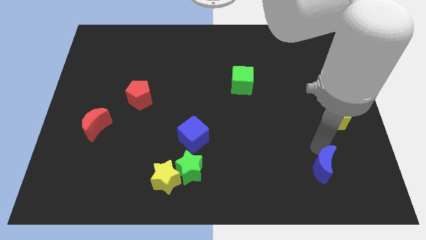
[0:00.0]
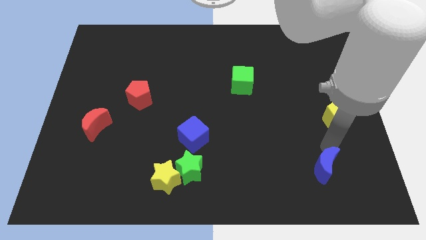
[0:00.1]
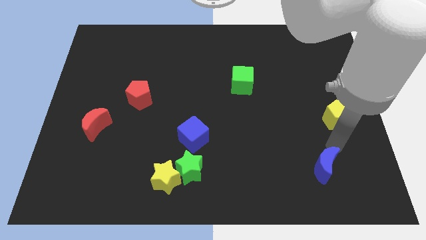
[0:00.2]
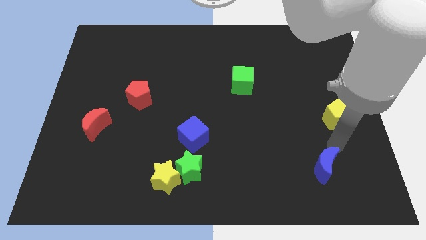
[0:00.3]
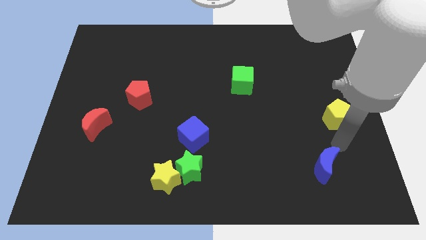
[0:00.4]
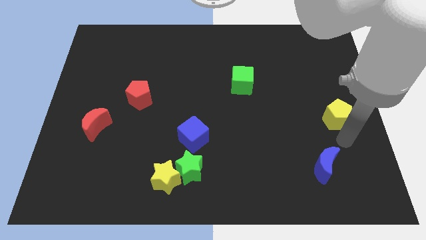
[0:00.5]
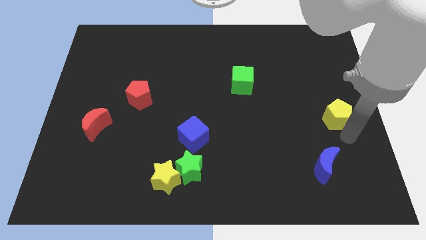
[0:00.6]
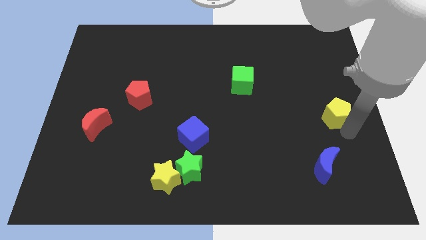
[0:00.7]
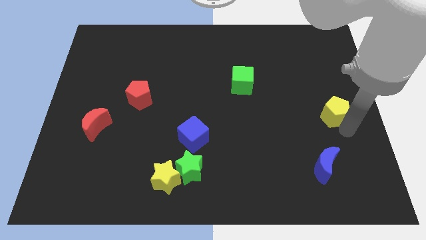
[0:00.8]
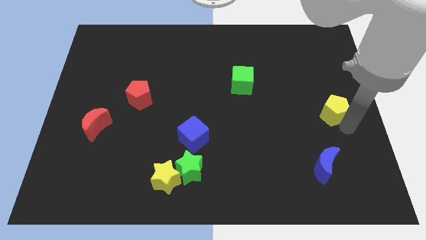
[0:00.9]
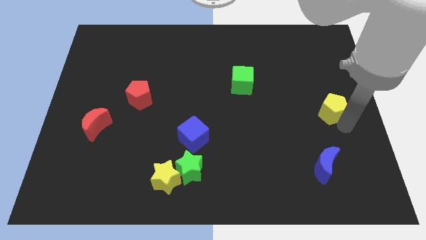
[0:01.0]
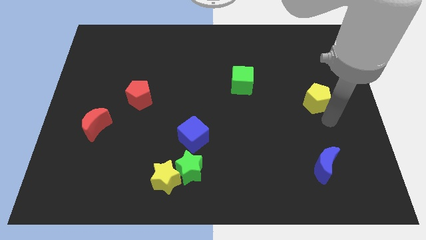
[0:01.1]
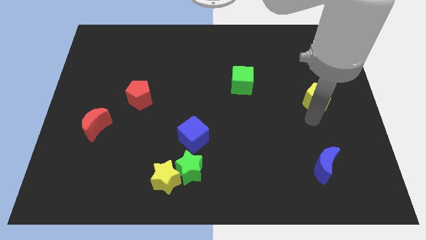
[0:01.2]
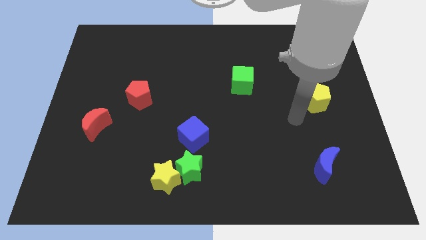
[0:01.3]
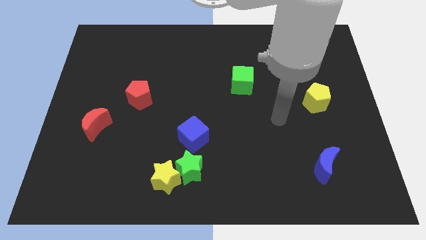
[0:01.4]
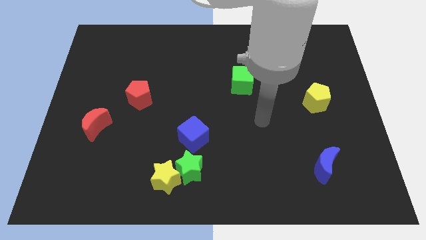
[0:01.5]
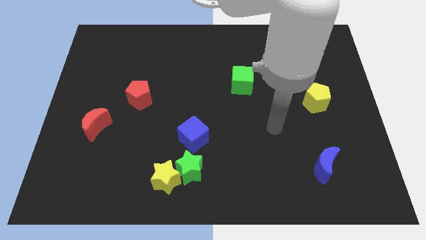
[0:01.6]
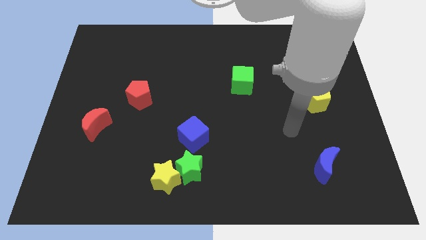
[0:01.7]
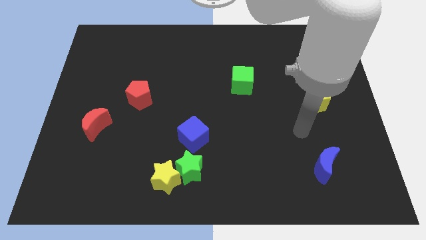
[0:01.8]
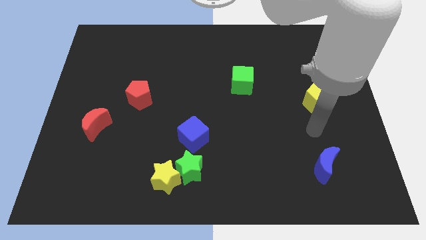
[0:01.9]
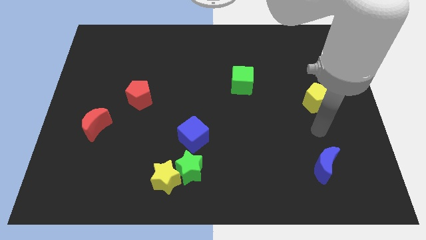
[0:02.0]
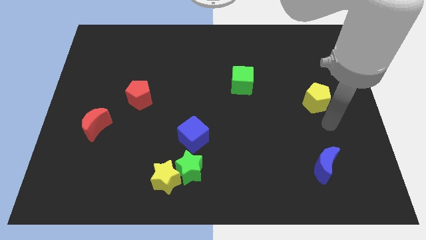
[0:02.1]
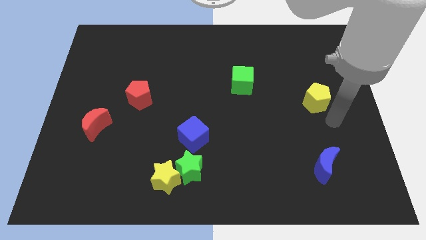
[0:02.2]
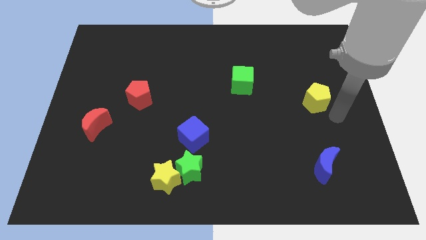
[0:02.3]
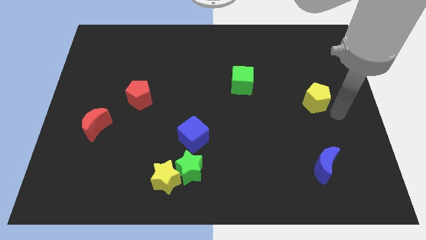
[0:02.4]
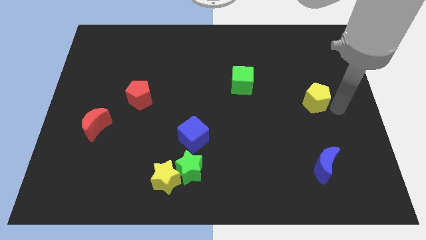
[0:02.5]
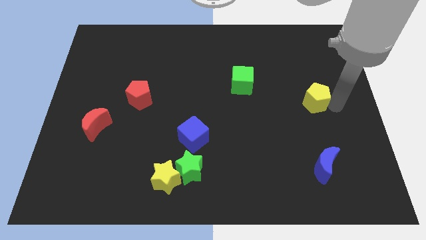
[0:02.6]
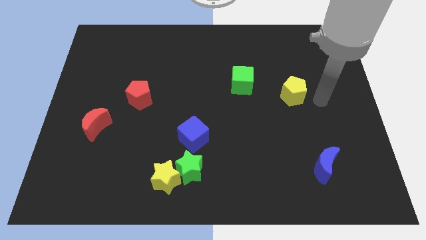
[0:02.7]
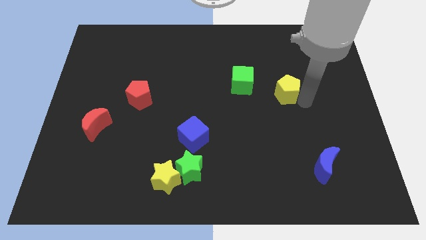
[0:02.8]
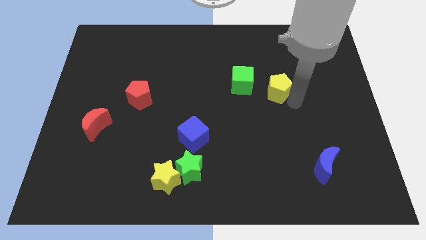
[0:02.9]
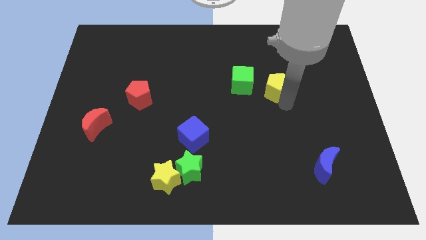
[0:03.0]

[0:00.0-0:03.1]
push yellow pentagon towards green cube

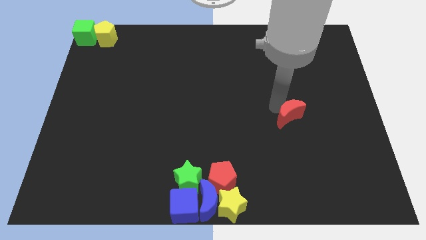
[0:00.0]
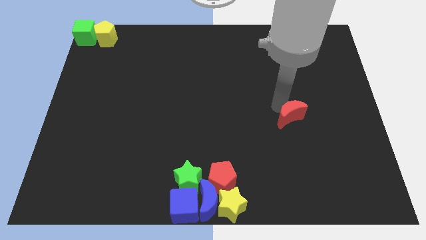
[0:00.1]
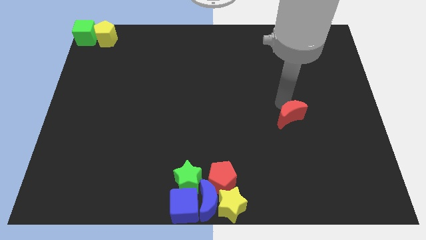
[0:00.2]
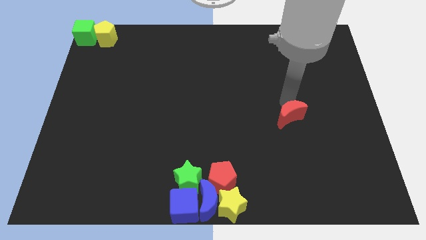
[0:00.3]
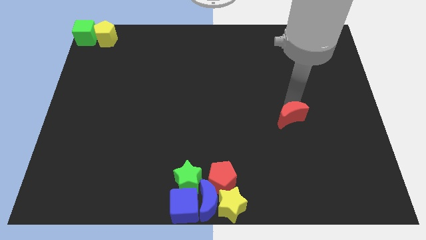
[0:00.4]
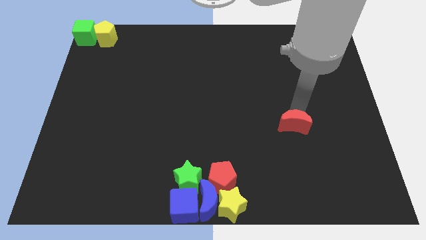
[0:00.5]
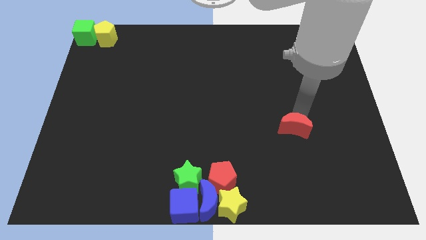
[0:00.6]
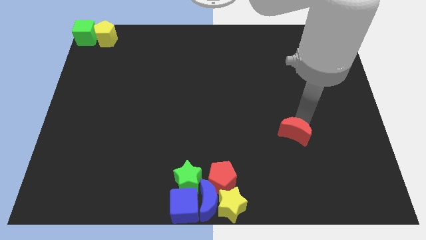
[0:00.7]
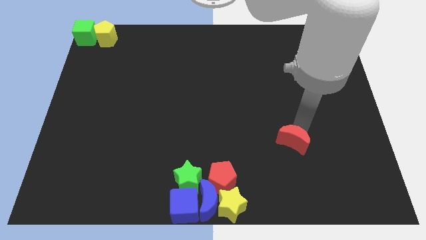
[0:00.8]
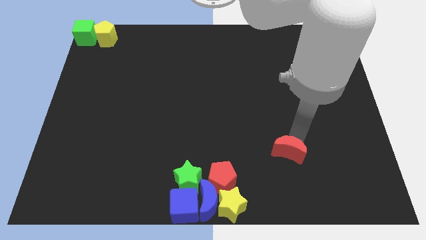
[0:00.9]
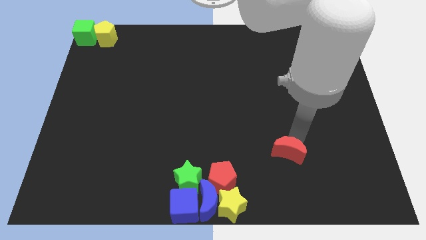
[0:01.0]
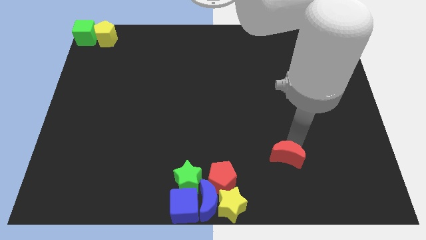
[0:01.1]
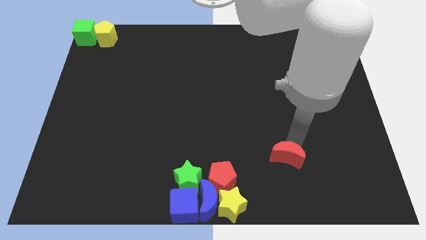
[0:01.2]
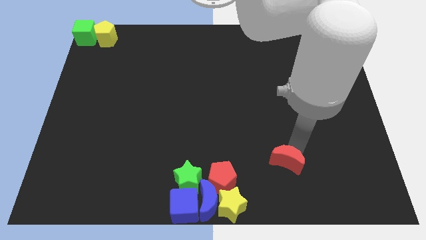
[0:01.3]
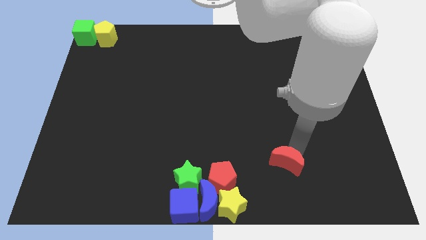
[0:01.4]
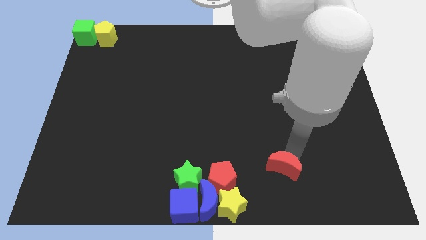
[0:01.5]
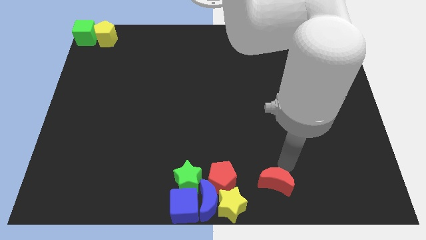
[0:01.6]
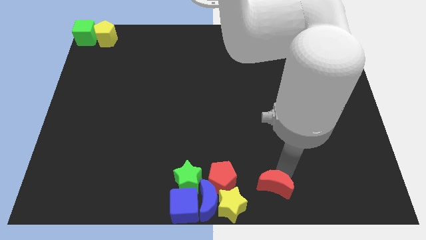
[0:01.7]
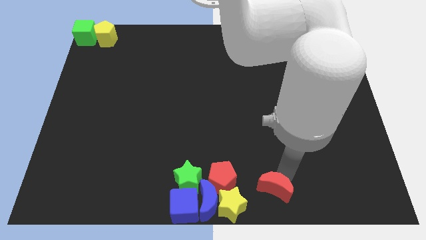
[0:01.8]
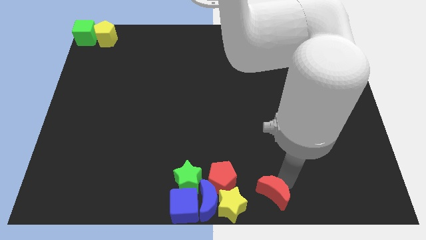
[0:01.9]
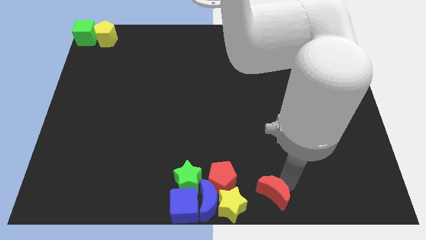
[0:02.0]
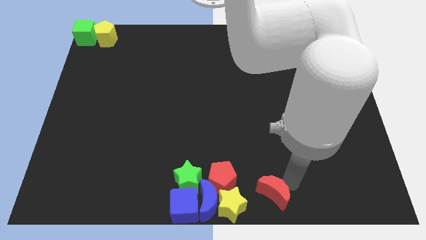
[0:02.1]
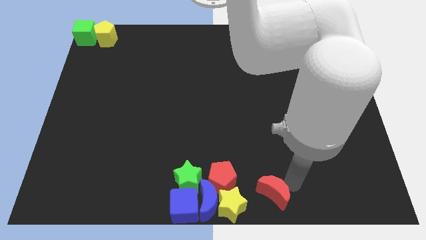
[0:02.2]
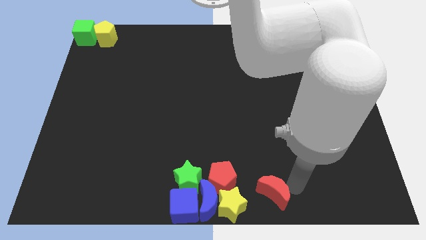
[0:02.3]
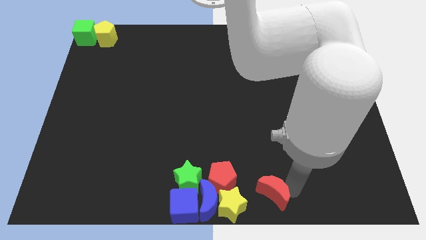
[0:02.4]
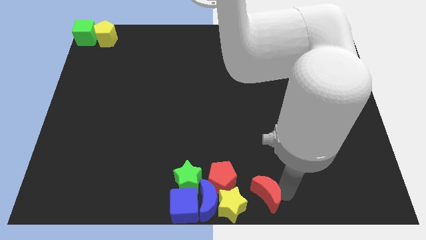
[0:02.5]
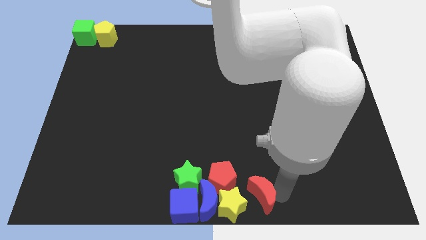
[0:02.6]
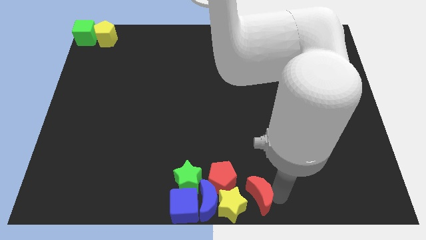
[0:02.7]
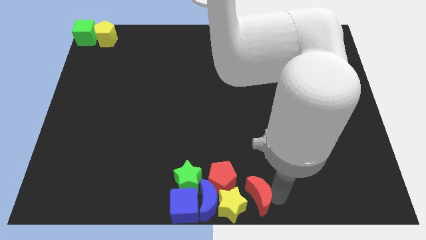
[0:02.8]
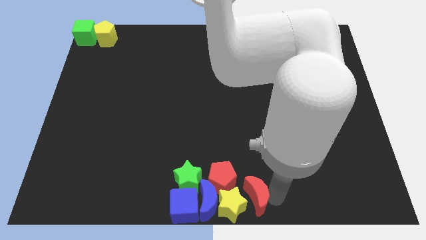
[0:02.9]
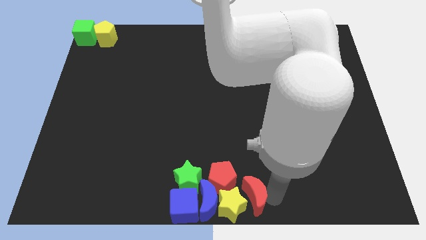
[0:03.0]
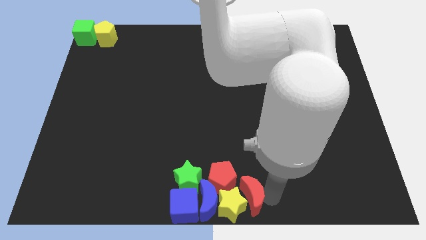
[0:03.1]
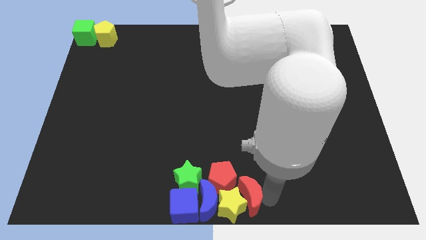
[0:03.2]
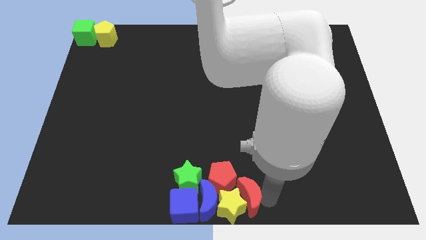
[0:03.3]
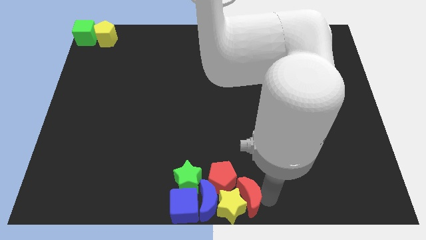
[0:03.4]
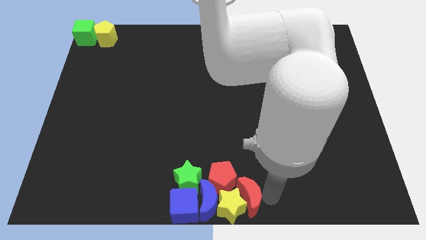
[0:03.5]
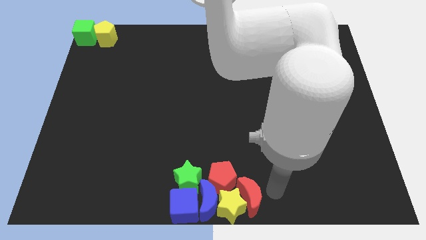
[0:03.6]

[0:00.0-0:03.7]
move the red moon into the yellow star at the bottom

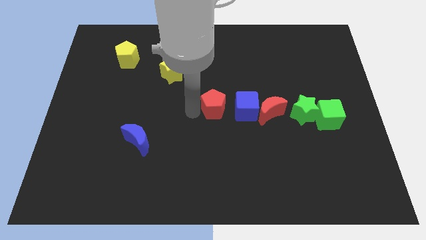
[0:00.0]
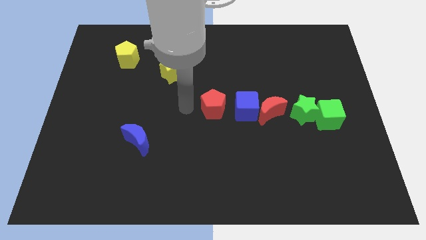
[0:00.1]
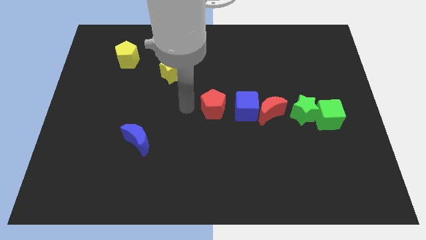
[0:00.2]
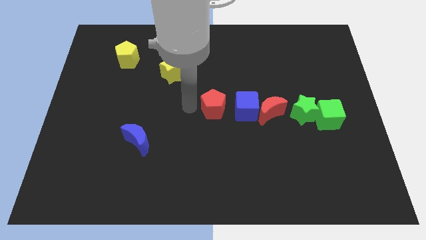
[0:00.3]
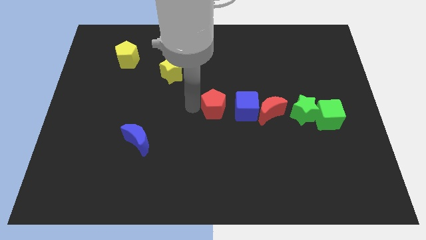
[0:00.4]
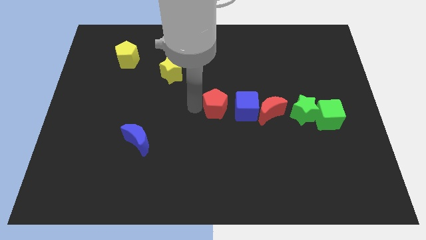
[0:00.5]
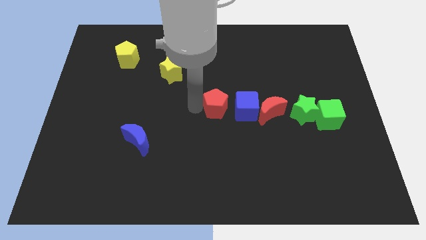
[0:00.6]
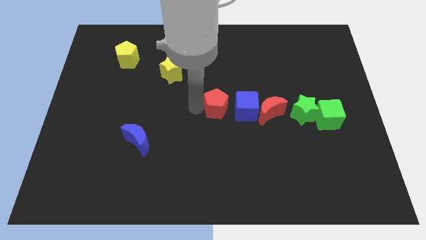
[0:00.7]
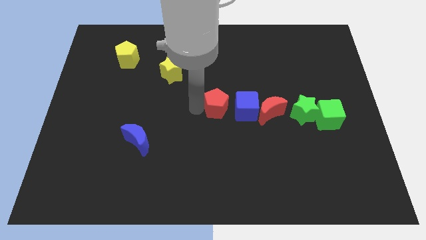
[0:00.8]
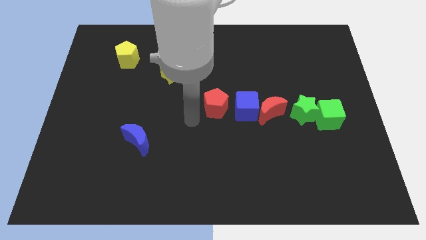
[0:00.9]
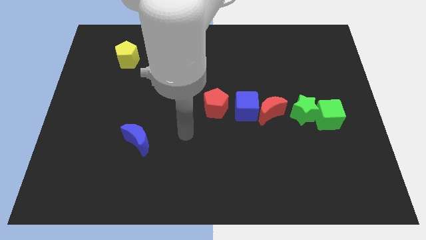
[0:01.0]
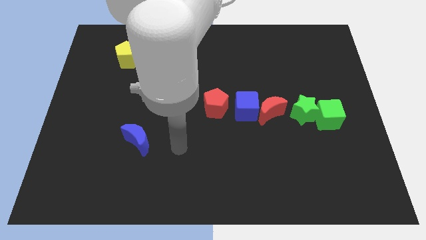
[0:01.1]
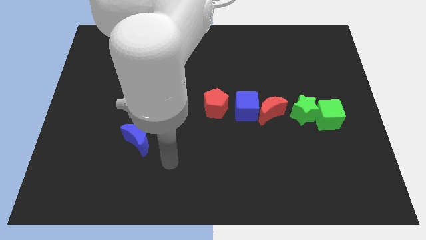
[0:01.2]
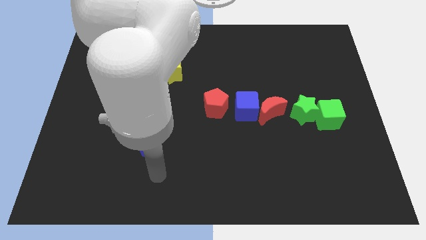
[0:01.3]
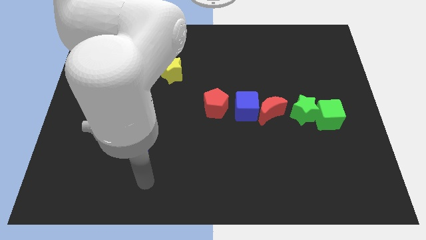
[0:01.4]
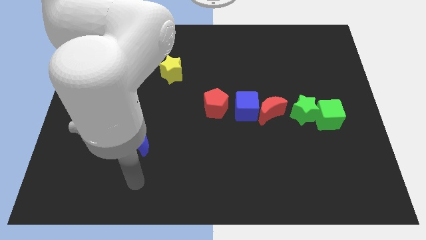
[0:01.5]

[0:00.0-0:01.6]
move your hand away from the red pentagon

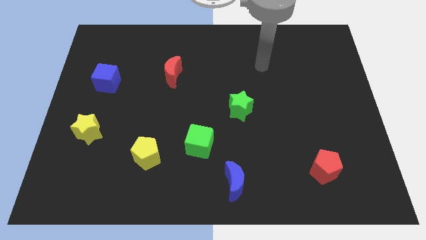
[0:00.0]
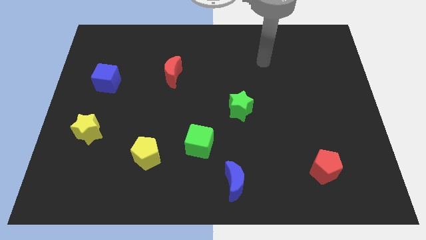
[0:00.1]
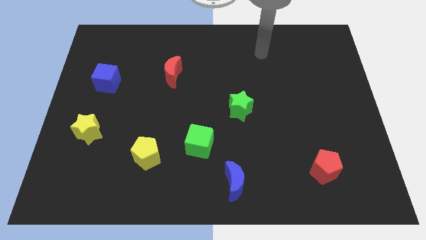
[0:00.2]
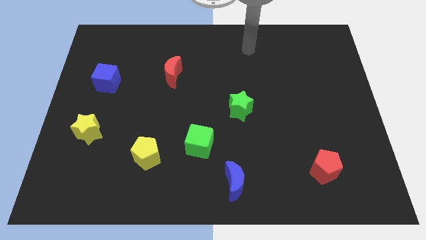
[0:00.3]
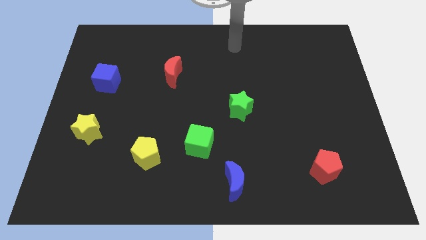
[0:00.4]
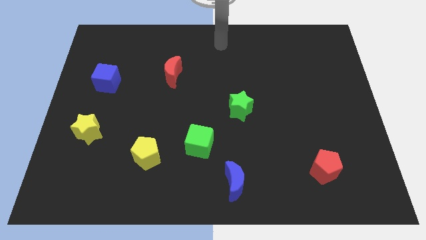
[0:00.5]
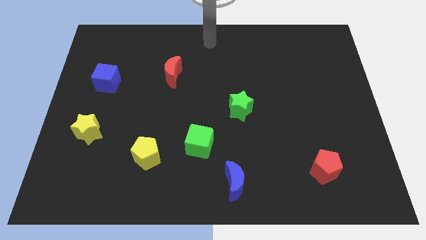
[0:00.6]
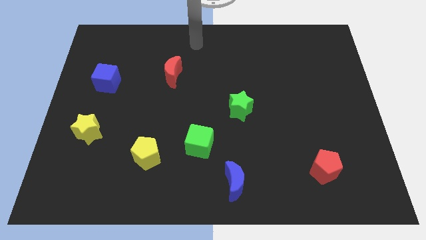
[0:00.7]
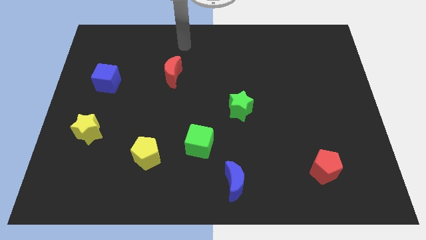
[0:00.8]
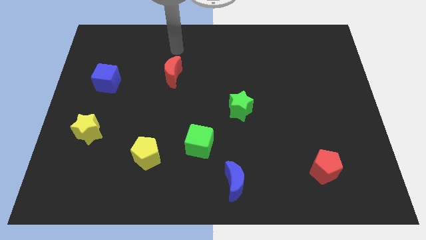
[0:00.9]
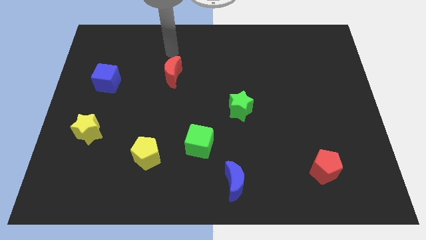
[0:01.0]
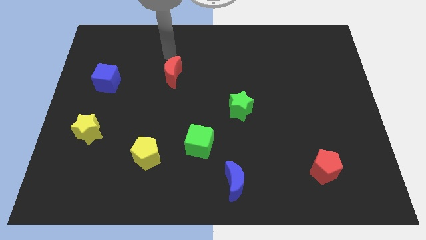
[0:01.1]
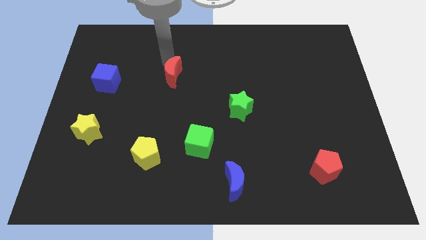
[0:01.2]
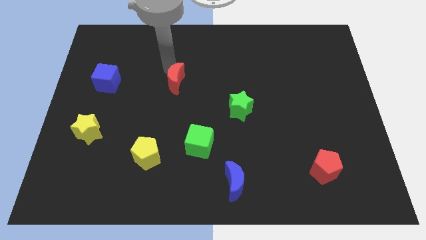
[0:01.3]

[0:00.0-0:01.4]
place your arm to the top of red moom
